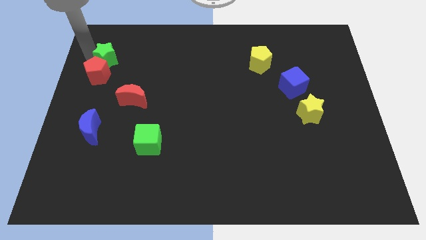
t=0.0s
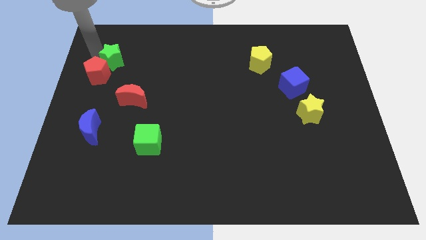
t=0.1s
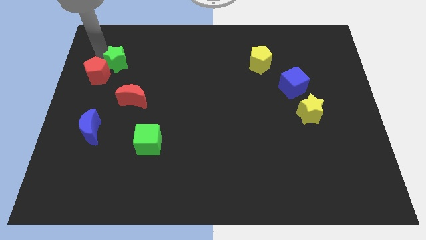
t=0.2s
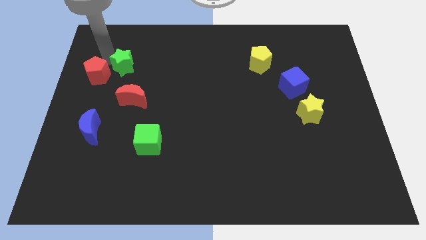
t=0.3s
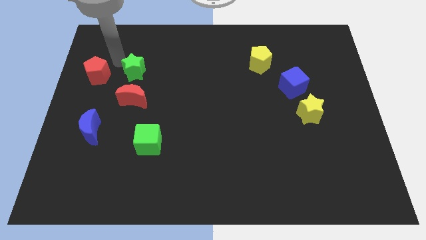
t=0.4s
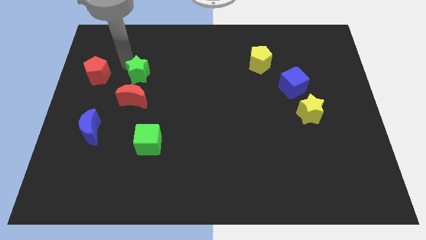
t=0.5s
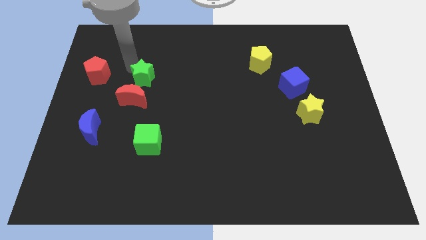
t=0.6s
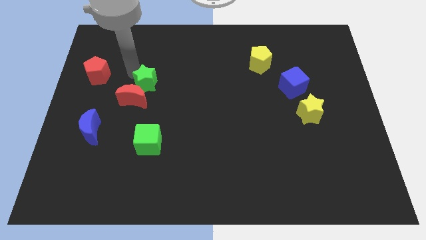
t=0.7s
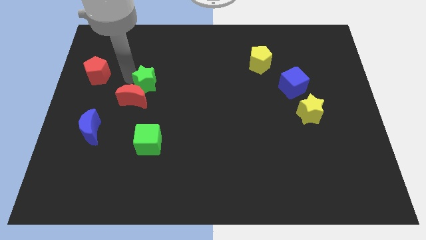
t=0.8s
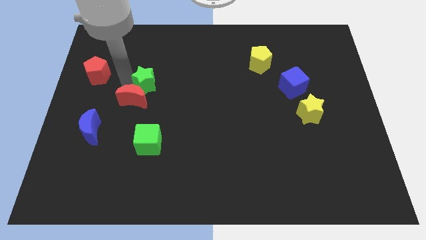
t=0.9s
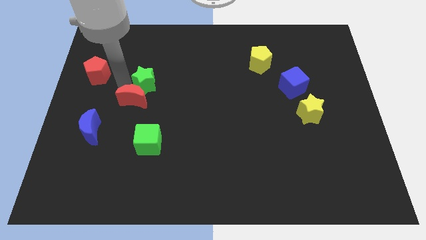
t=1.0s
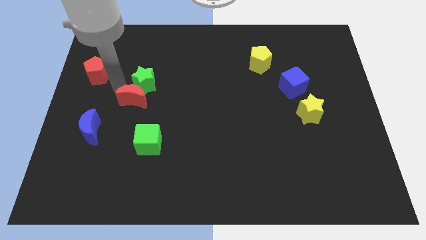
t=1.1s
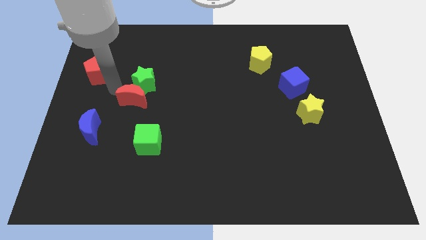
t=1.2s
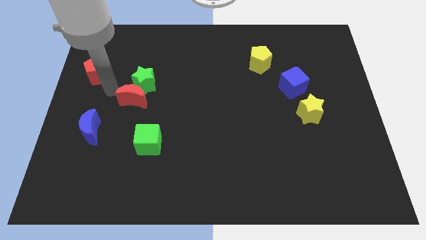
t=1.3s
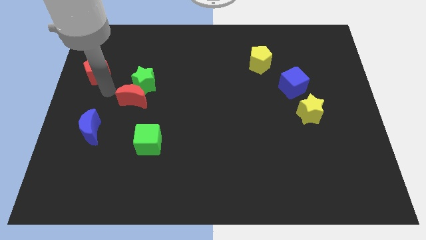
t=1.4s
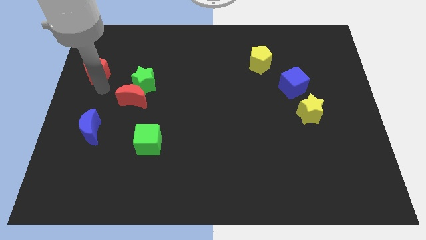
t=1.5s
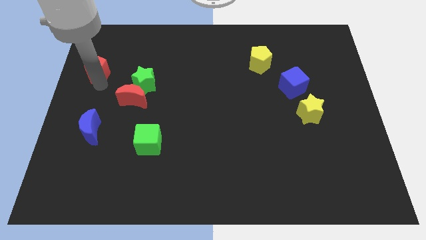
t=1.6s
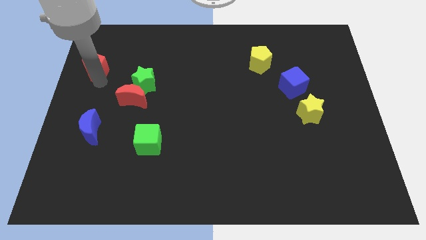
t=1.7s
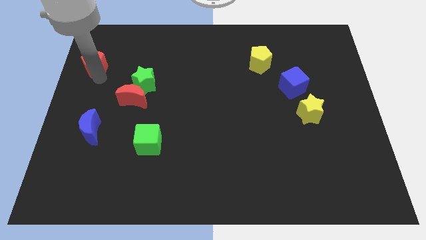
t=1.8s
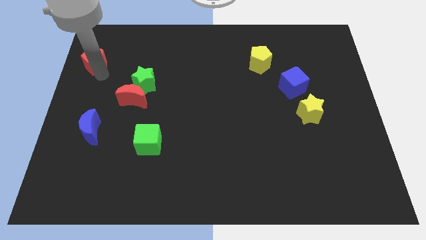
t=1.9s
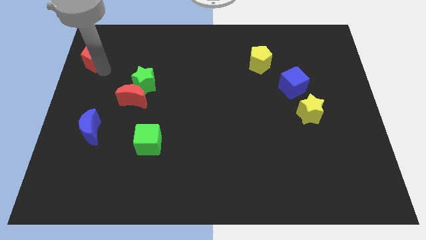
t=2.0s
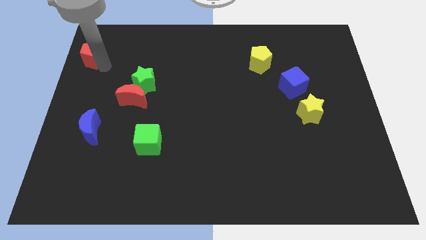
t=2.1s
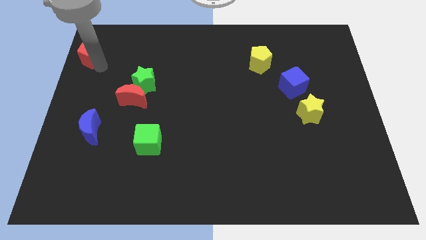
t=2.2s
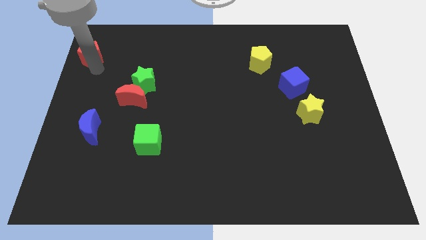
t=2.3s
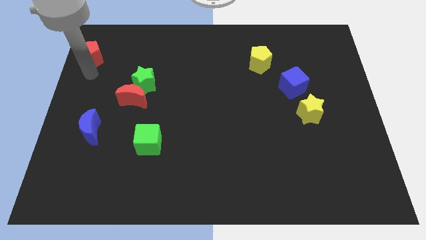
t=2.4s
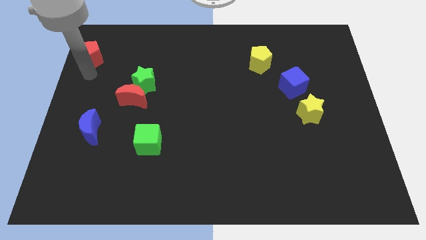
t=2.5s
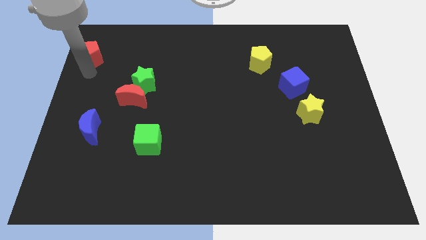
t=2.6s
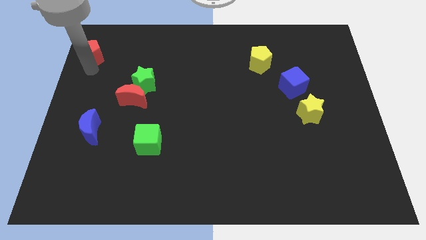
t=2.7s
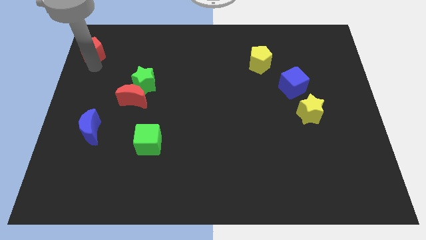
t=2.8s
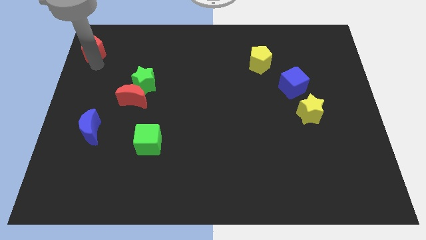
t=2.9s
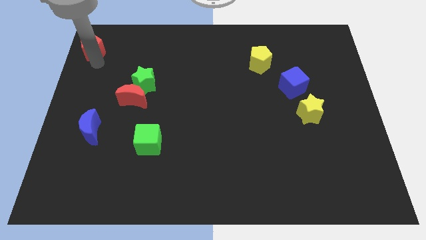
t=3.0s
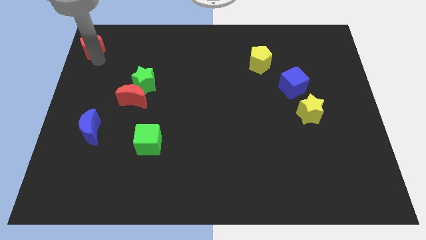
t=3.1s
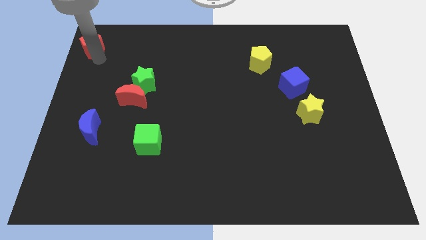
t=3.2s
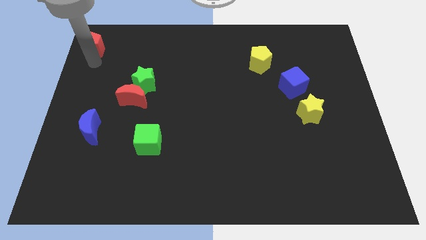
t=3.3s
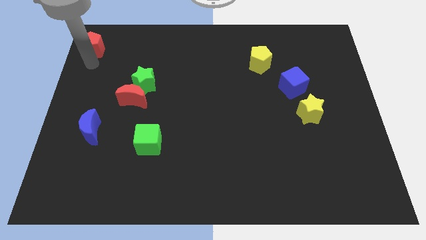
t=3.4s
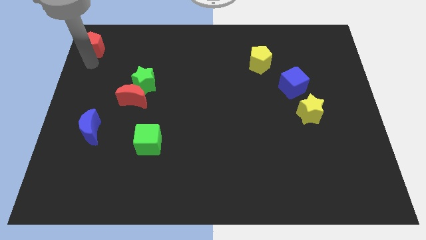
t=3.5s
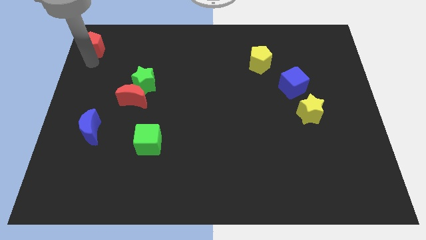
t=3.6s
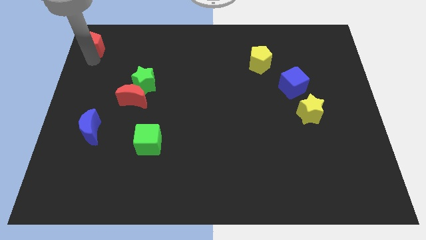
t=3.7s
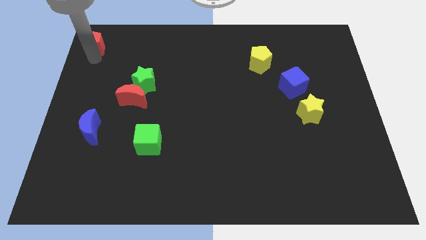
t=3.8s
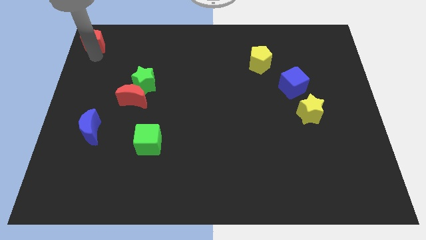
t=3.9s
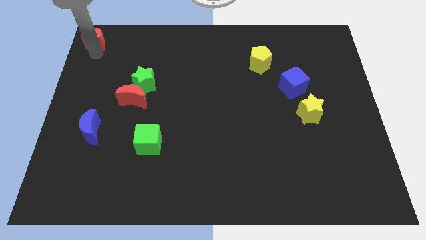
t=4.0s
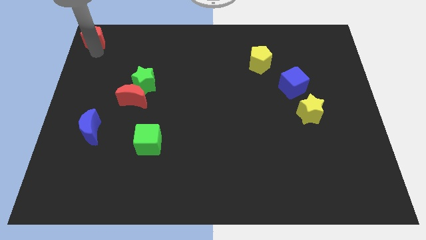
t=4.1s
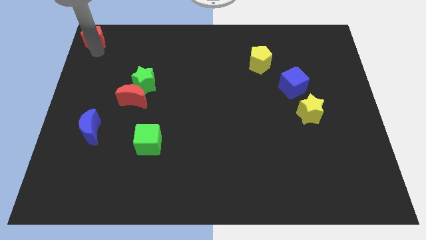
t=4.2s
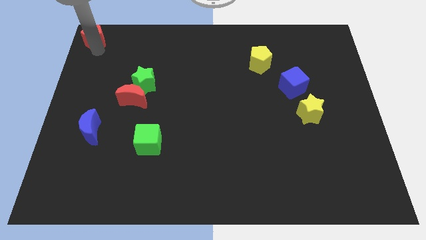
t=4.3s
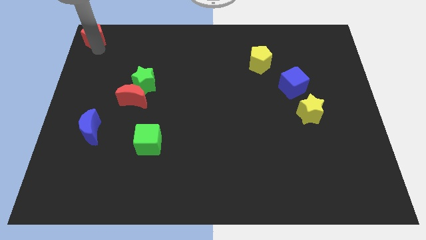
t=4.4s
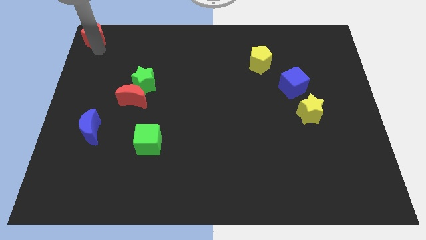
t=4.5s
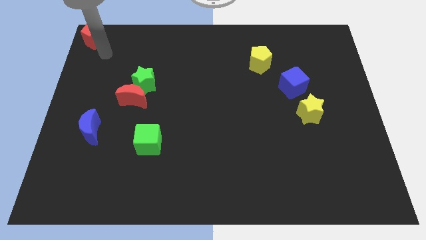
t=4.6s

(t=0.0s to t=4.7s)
move your arm to the top left side of the board

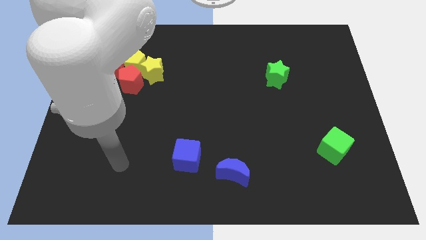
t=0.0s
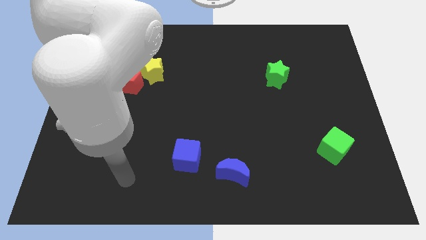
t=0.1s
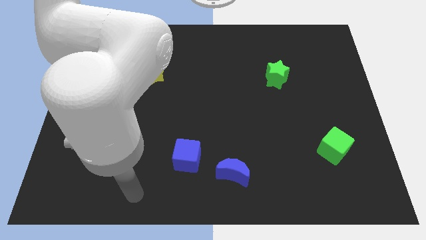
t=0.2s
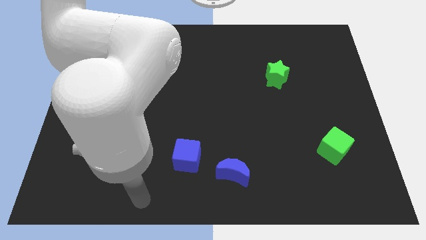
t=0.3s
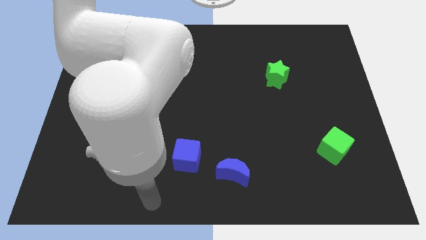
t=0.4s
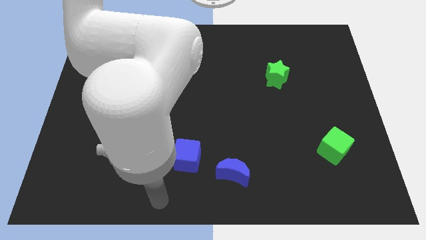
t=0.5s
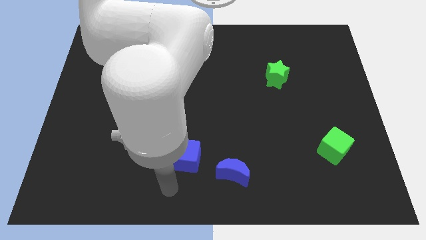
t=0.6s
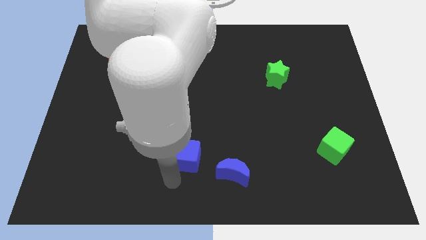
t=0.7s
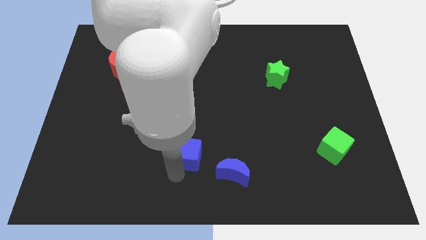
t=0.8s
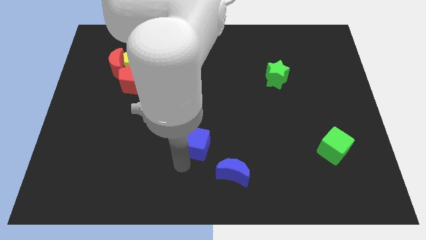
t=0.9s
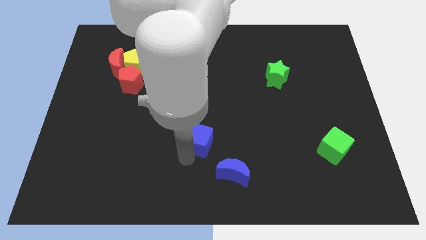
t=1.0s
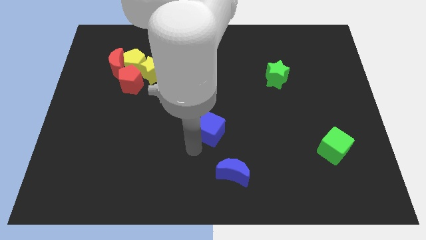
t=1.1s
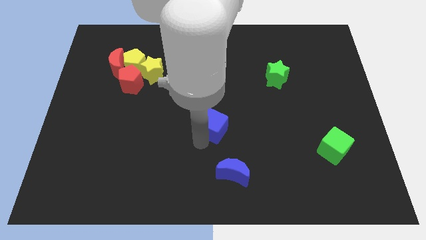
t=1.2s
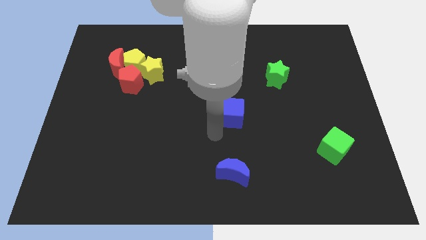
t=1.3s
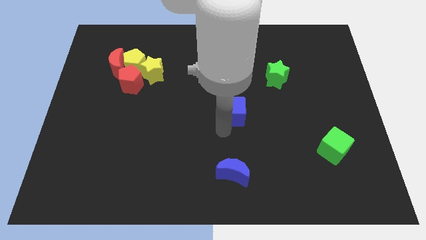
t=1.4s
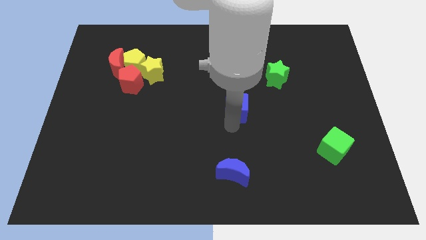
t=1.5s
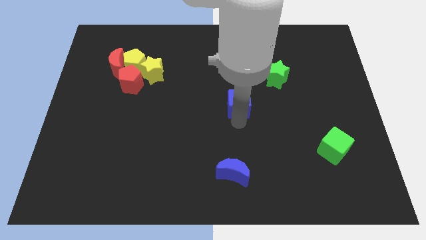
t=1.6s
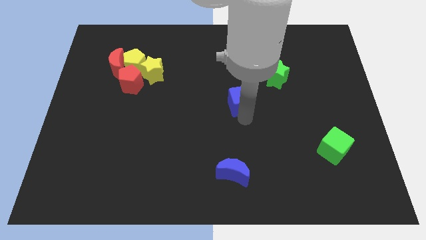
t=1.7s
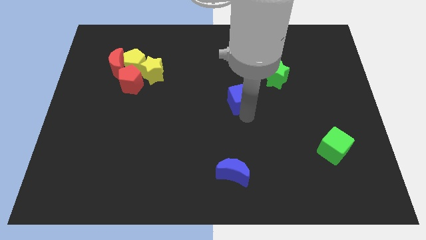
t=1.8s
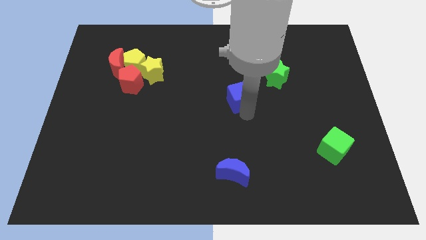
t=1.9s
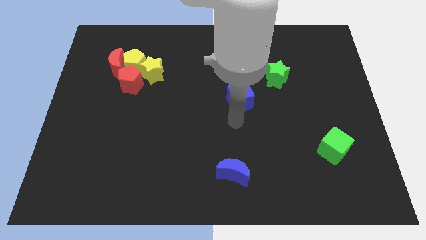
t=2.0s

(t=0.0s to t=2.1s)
move the blue cube to the center

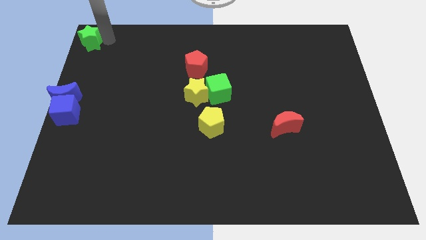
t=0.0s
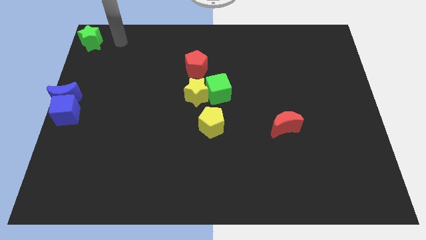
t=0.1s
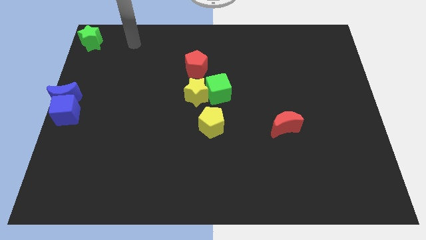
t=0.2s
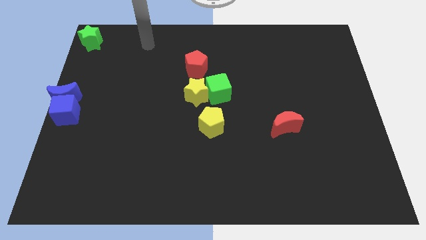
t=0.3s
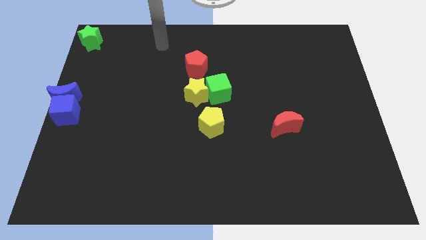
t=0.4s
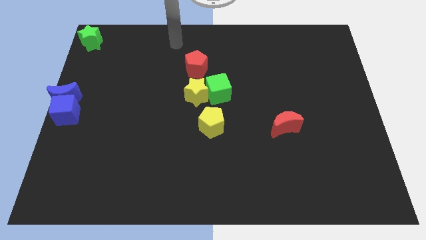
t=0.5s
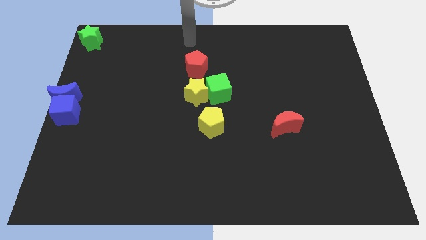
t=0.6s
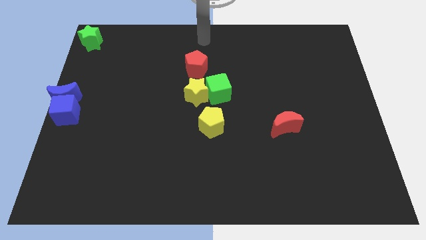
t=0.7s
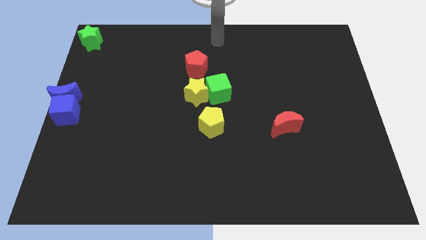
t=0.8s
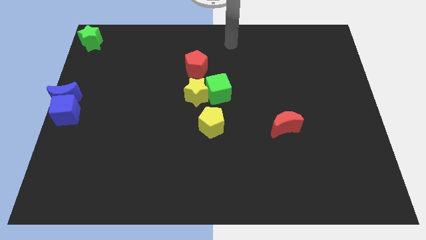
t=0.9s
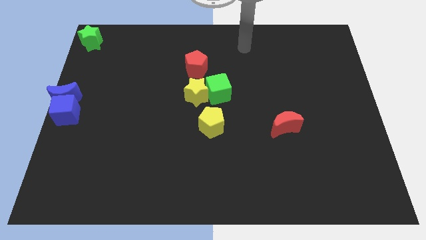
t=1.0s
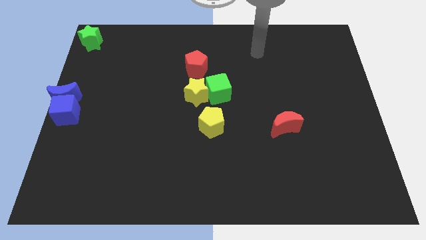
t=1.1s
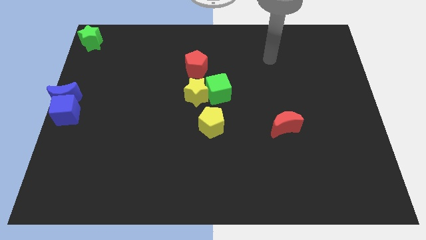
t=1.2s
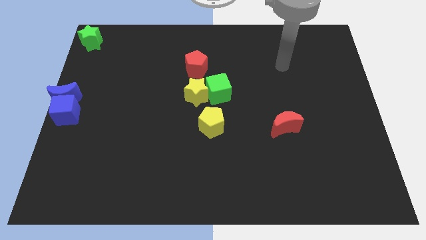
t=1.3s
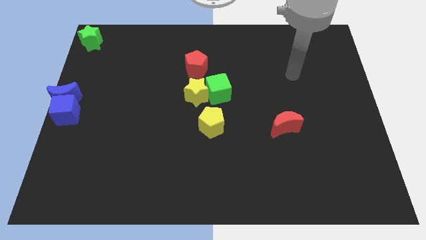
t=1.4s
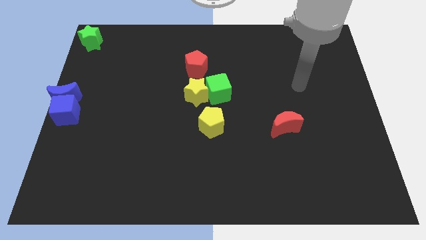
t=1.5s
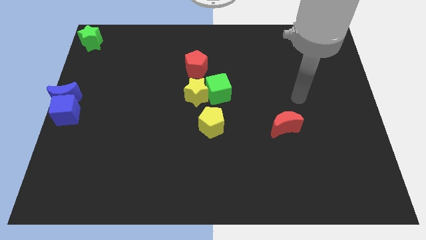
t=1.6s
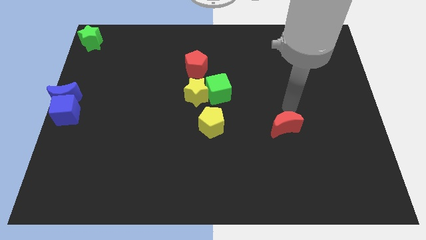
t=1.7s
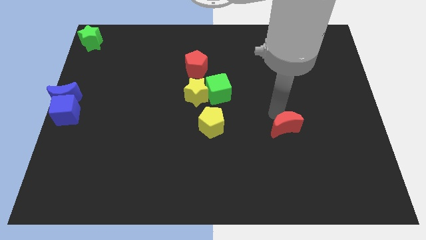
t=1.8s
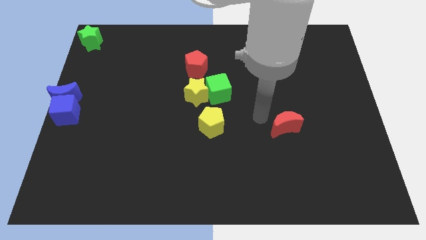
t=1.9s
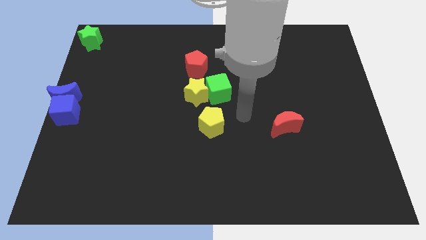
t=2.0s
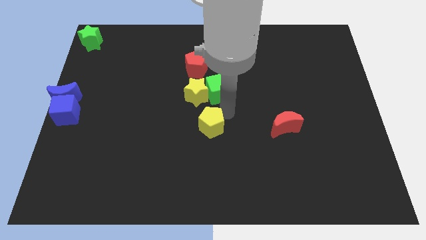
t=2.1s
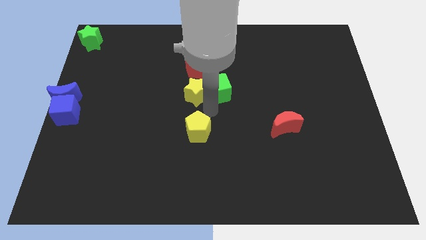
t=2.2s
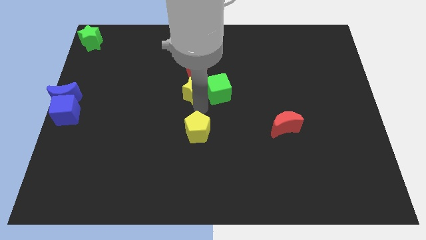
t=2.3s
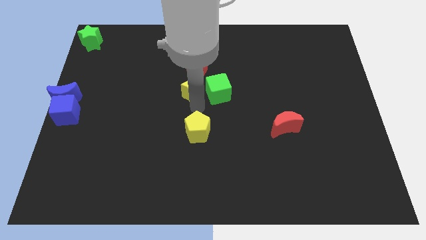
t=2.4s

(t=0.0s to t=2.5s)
move the yellow pentagon to the bottom of the yellow star
